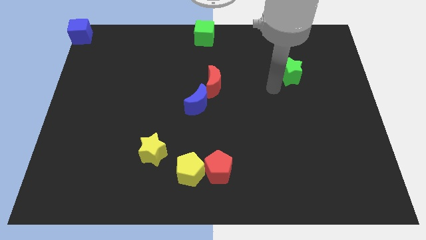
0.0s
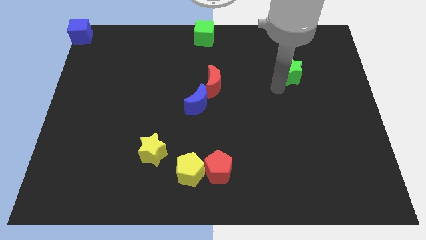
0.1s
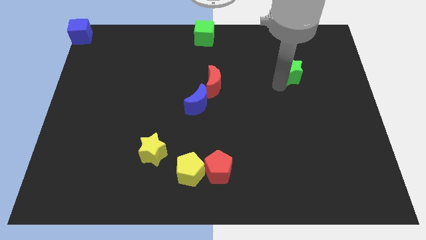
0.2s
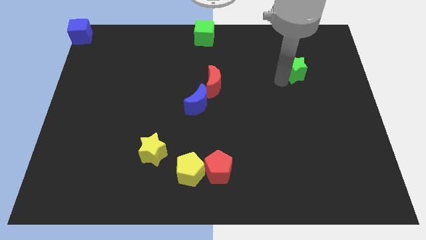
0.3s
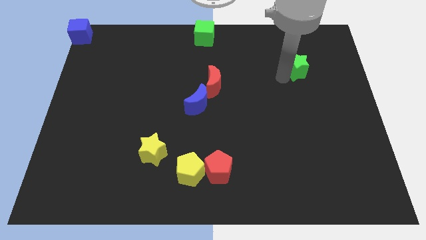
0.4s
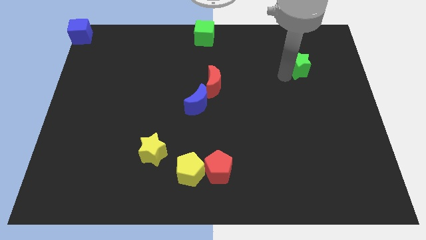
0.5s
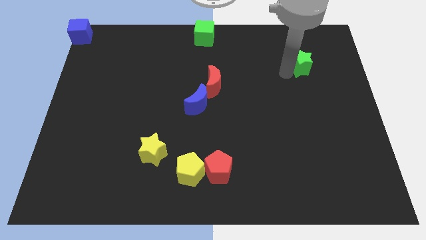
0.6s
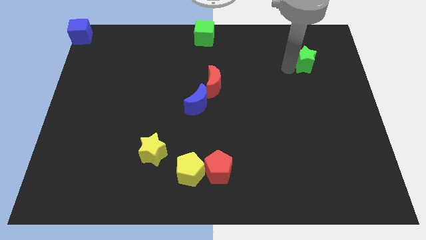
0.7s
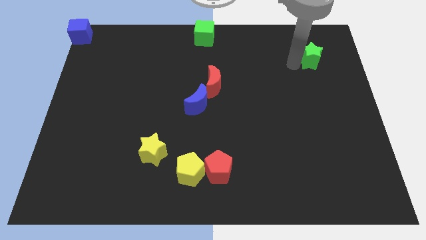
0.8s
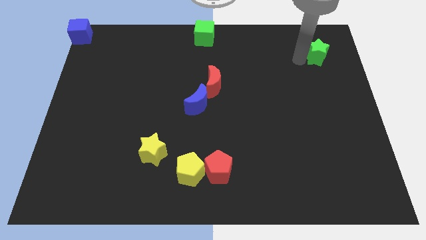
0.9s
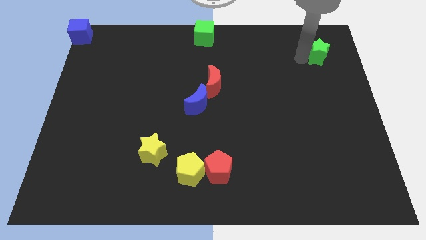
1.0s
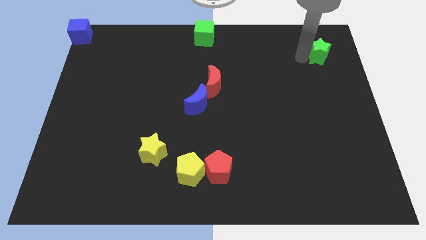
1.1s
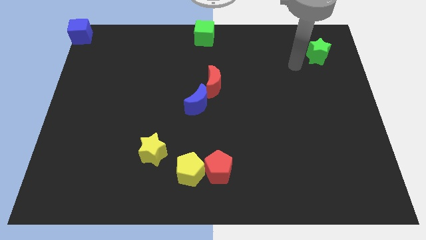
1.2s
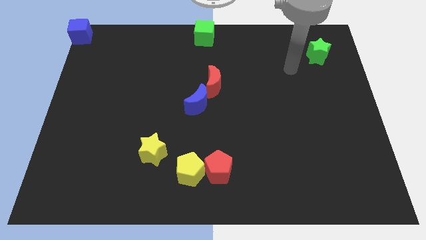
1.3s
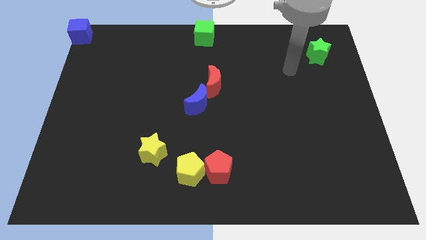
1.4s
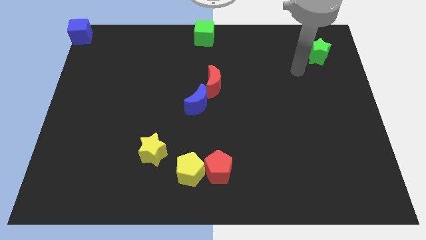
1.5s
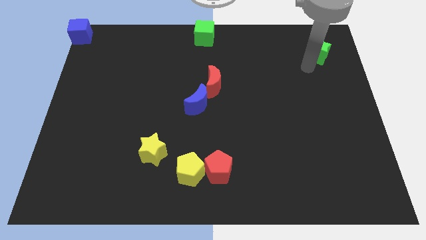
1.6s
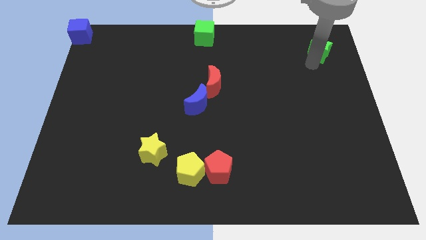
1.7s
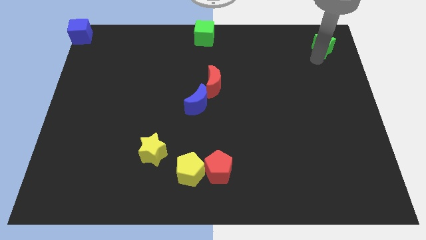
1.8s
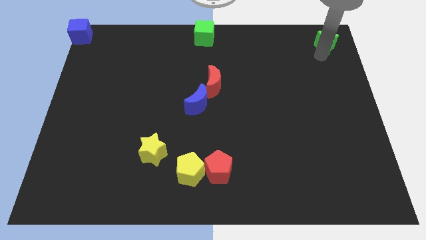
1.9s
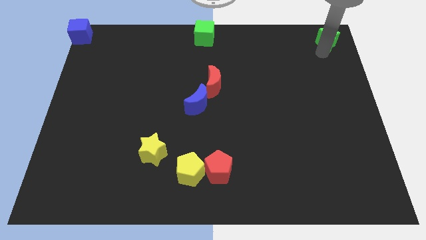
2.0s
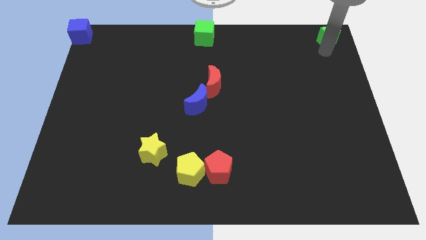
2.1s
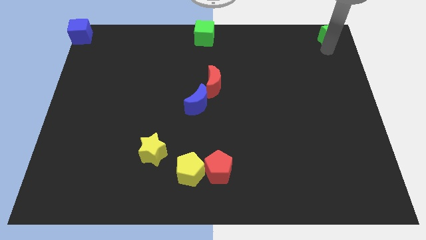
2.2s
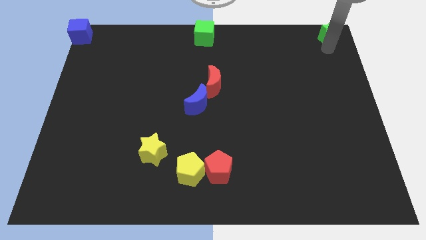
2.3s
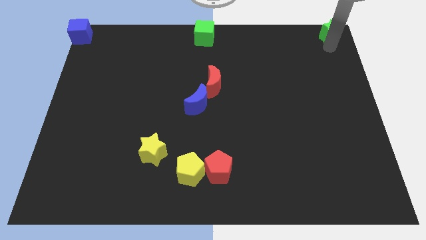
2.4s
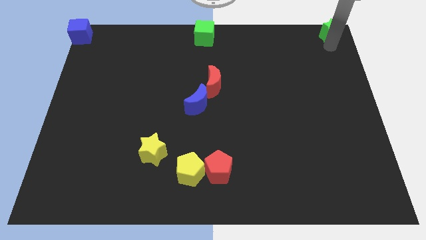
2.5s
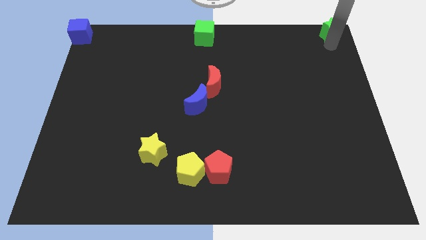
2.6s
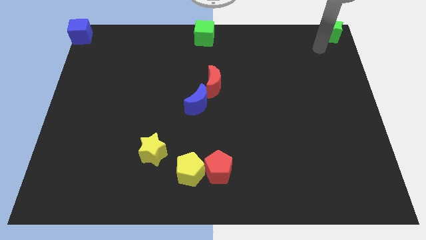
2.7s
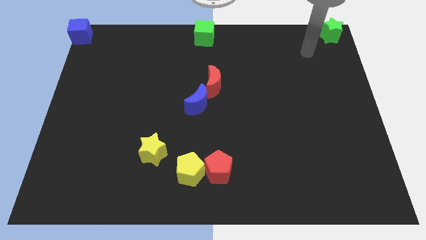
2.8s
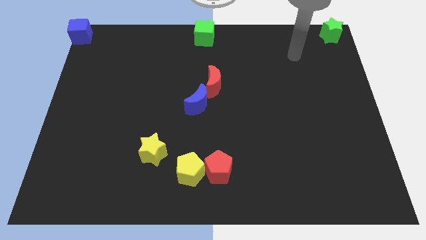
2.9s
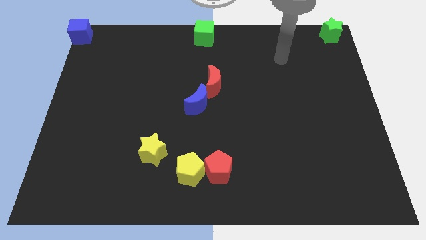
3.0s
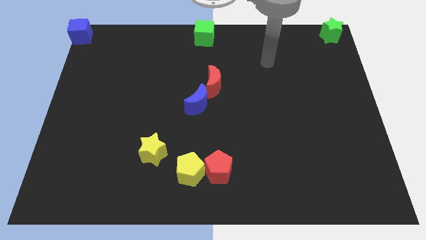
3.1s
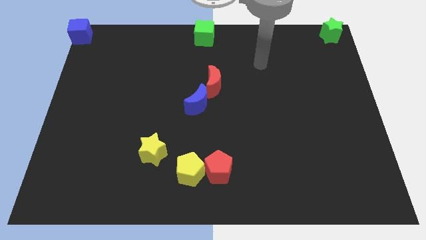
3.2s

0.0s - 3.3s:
move green star to the top right corner of the board

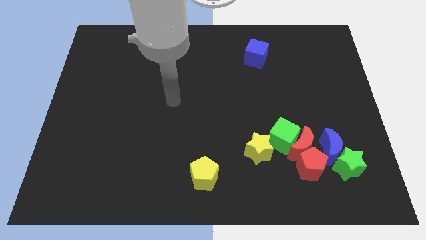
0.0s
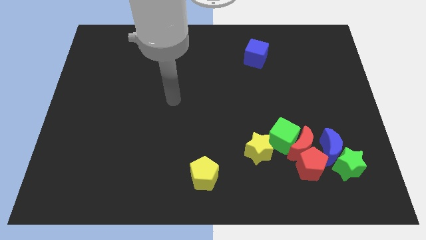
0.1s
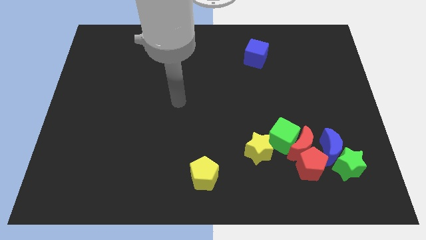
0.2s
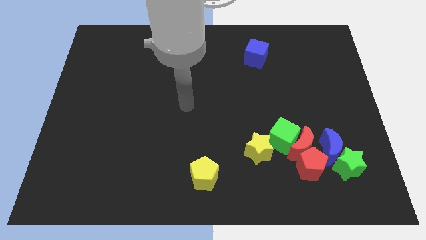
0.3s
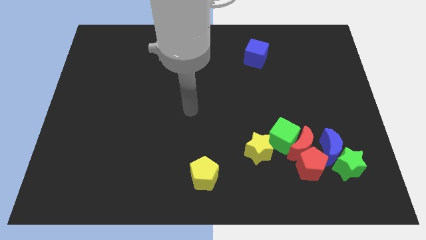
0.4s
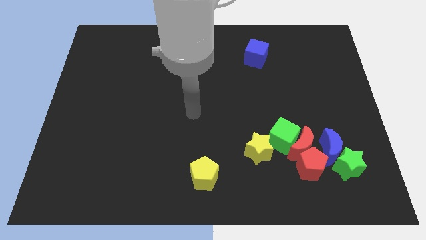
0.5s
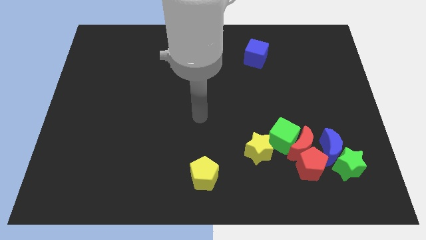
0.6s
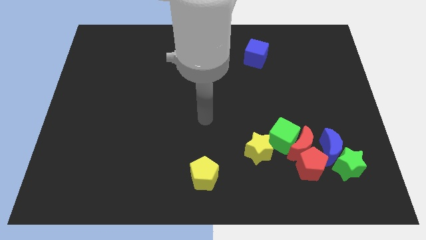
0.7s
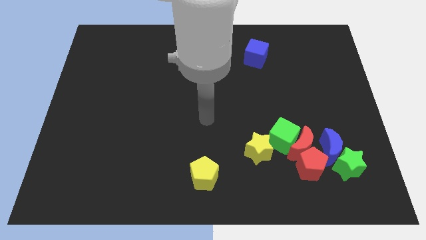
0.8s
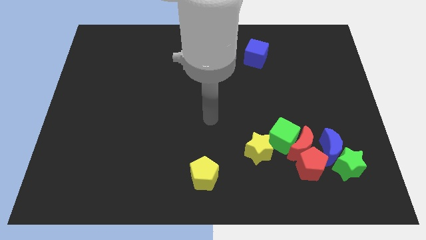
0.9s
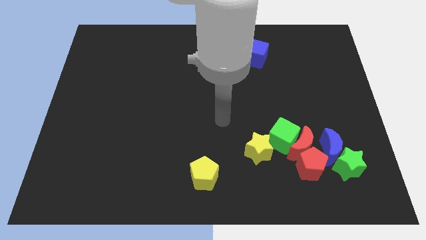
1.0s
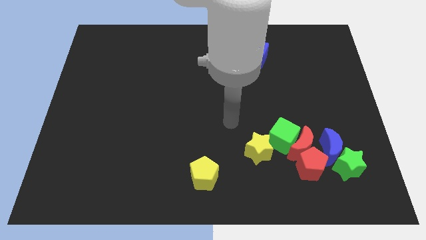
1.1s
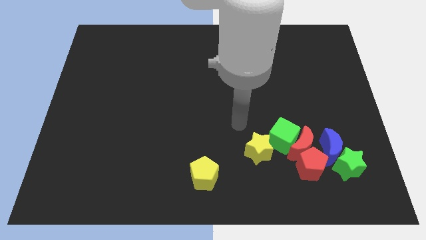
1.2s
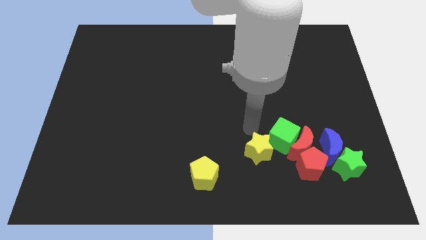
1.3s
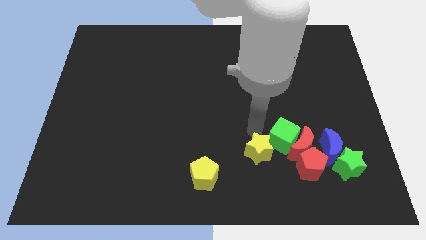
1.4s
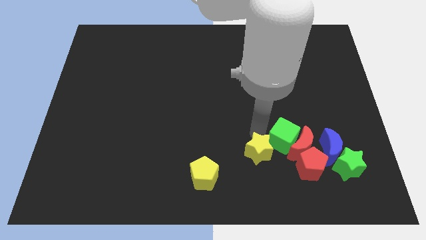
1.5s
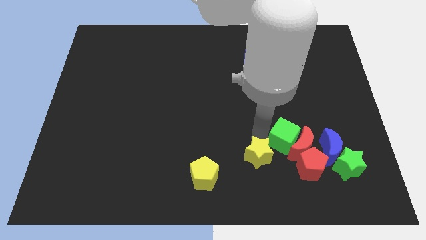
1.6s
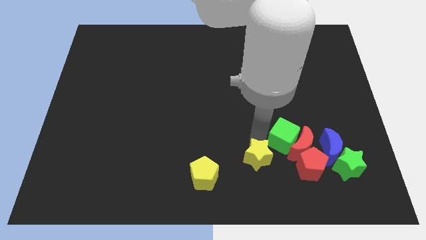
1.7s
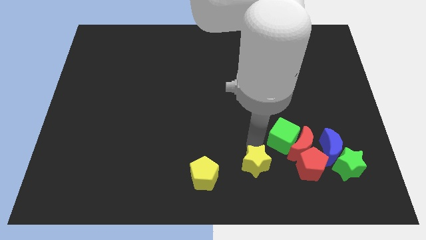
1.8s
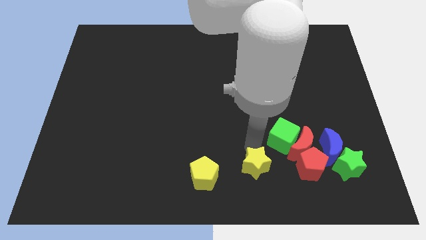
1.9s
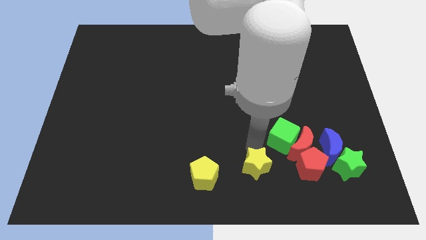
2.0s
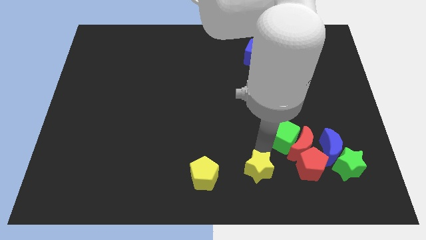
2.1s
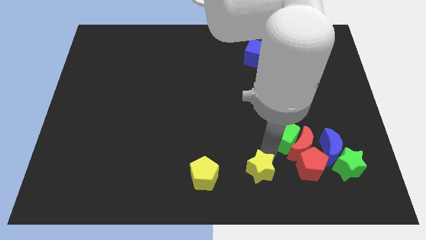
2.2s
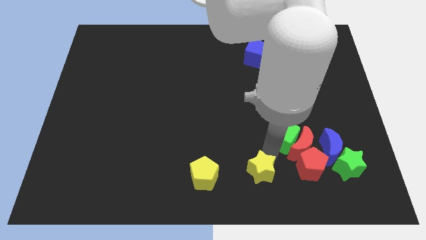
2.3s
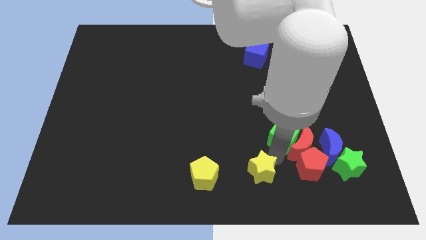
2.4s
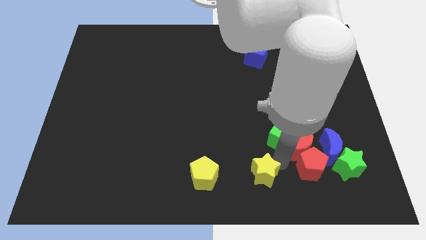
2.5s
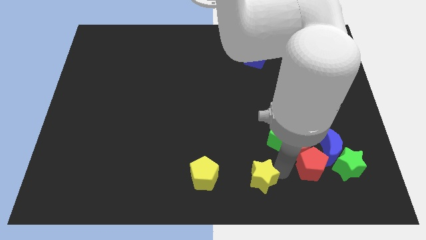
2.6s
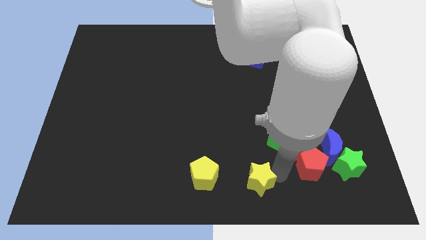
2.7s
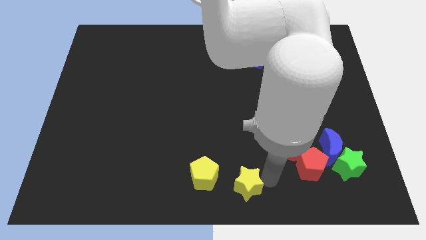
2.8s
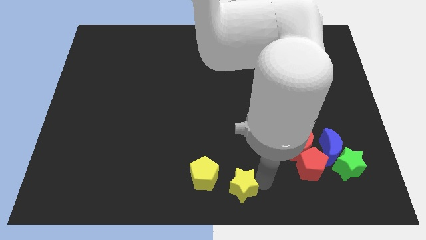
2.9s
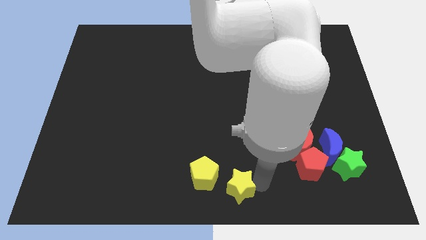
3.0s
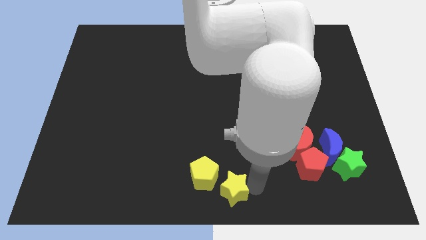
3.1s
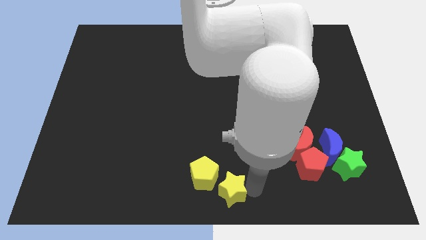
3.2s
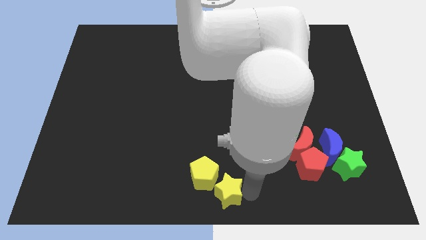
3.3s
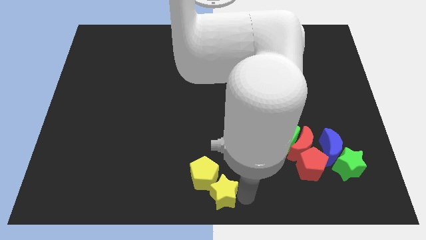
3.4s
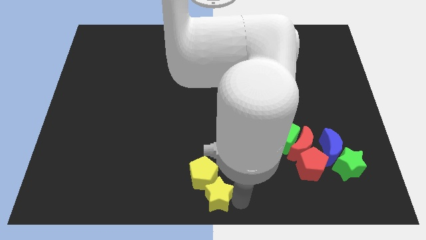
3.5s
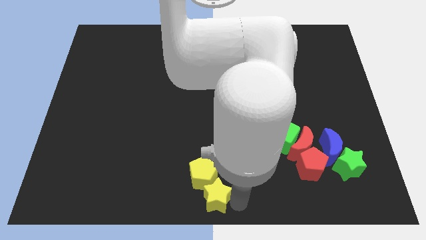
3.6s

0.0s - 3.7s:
place the yellow star below the yellow pentagon

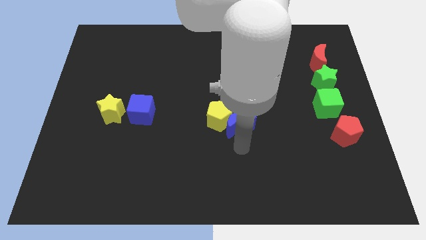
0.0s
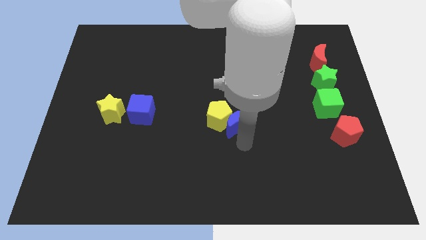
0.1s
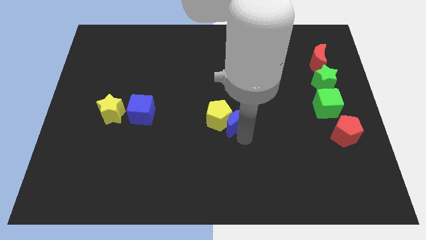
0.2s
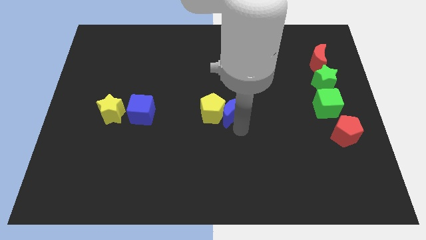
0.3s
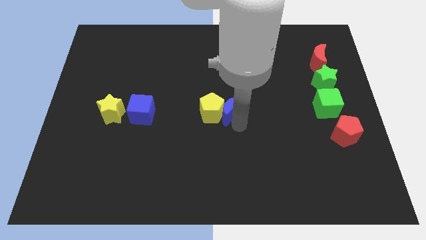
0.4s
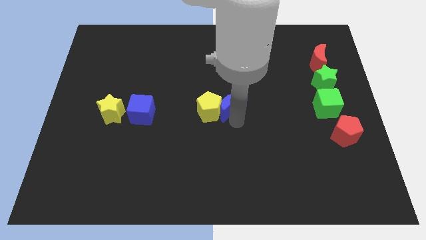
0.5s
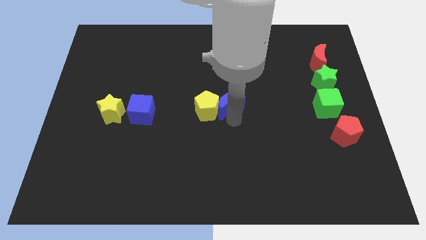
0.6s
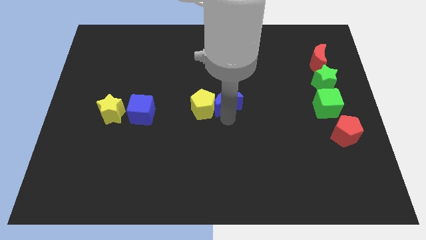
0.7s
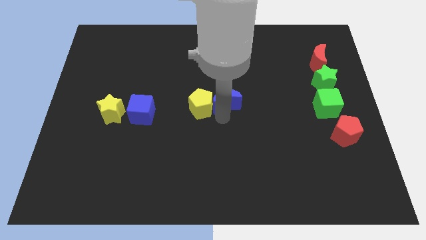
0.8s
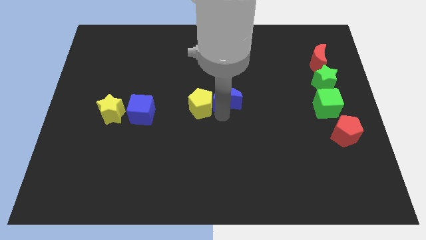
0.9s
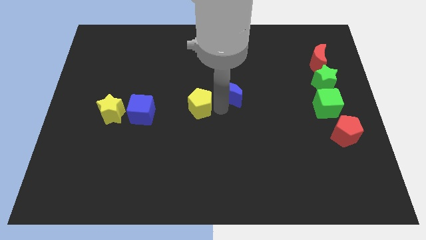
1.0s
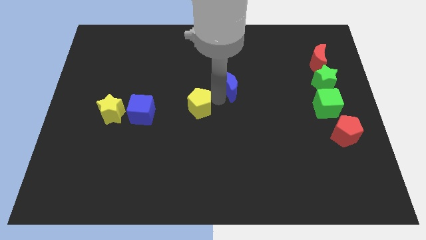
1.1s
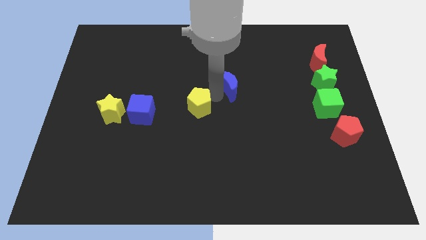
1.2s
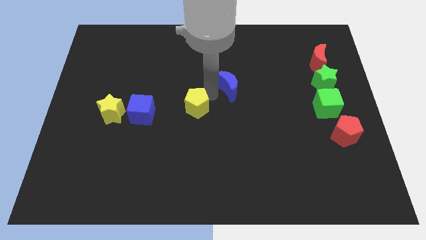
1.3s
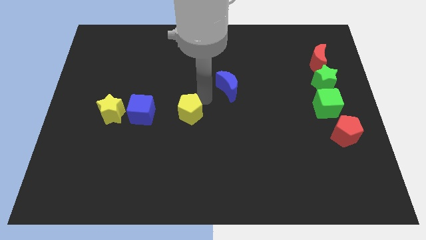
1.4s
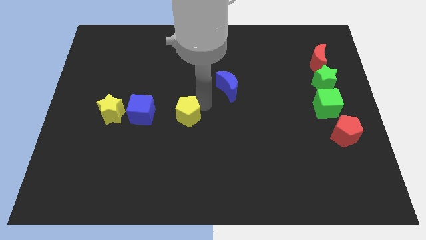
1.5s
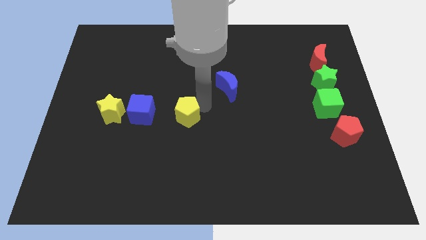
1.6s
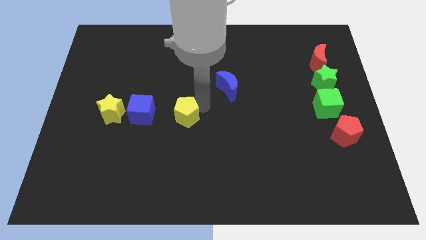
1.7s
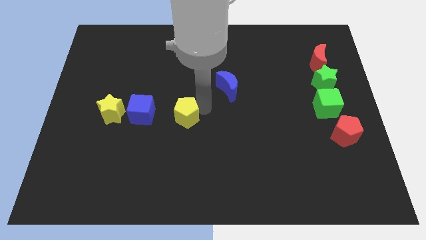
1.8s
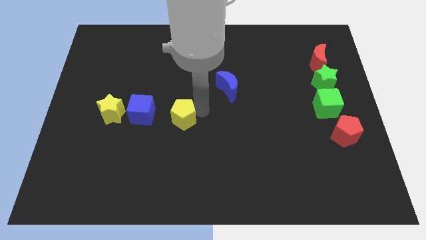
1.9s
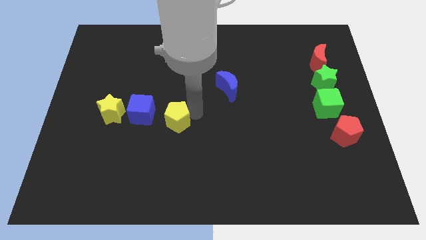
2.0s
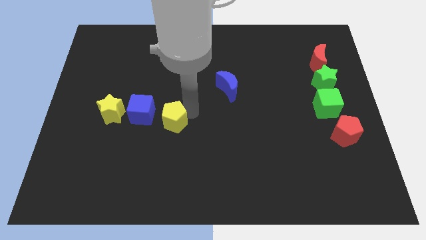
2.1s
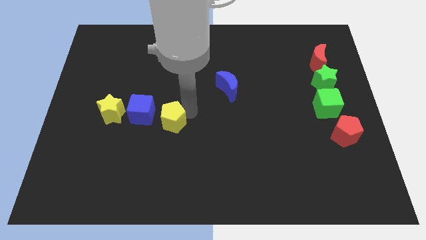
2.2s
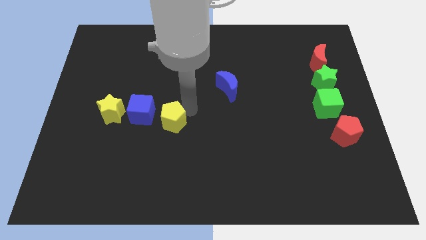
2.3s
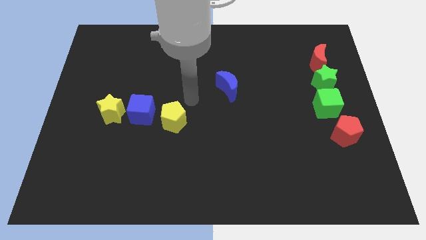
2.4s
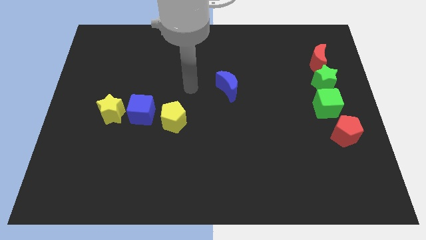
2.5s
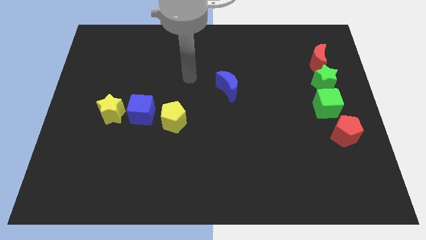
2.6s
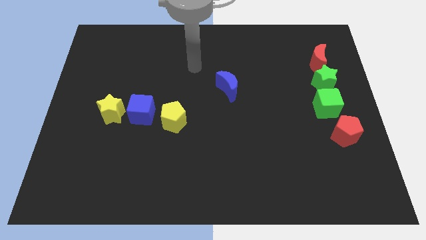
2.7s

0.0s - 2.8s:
move yellow pentagon on the right side of the blue cube
